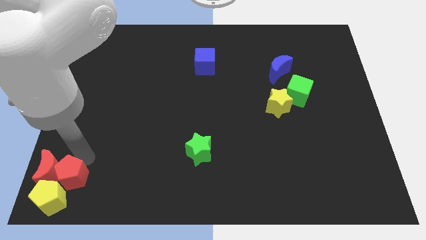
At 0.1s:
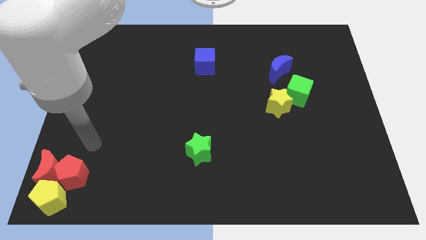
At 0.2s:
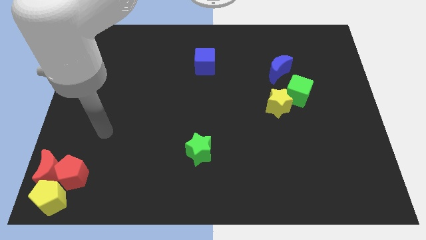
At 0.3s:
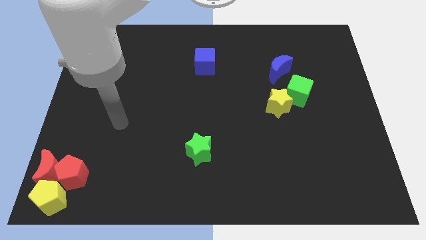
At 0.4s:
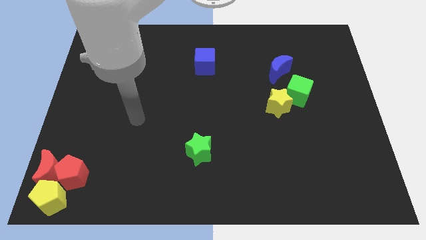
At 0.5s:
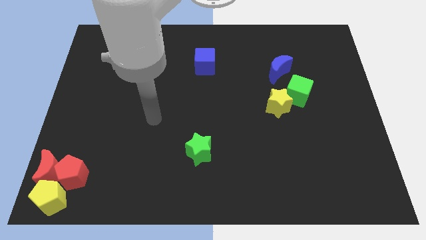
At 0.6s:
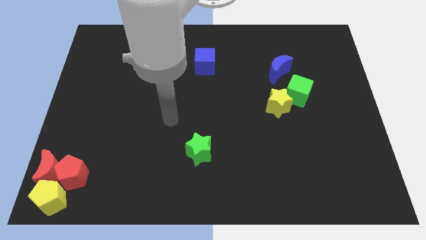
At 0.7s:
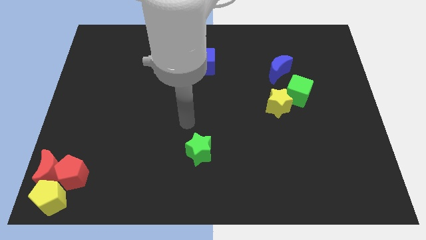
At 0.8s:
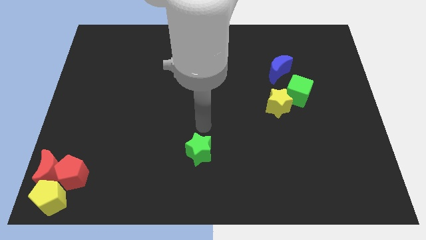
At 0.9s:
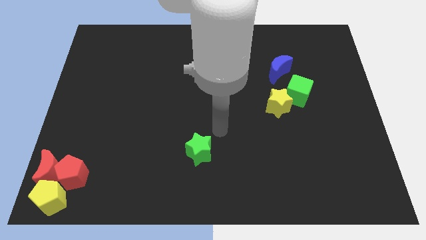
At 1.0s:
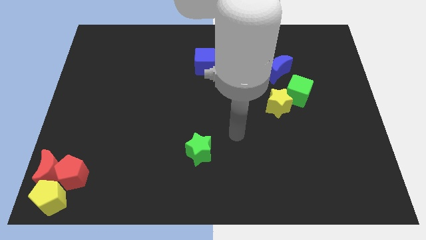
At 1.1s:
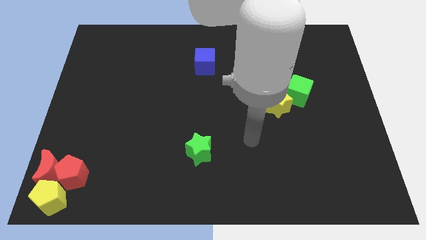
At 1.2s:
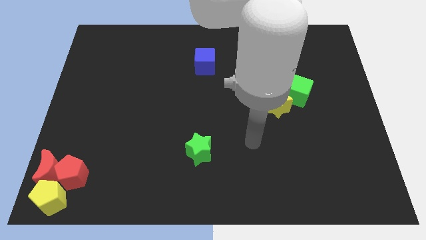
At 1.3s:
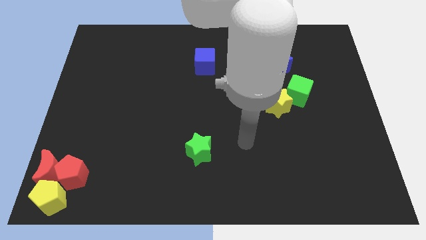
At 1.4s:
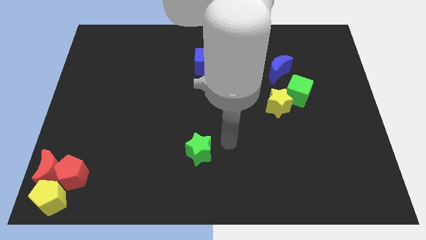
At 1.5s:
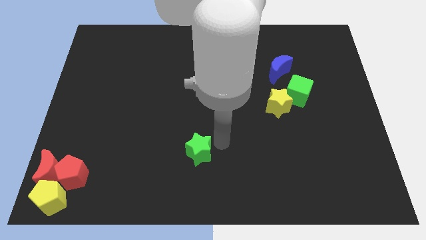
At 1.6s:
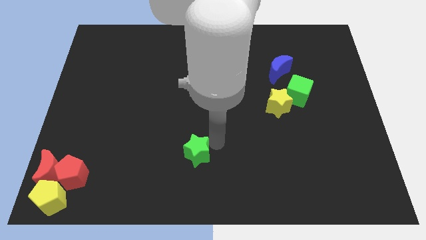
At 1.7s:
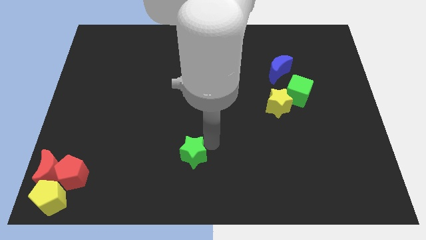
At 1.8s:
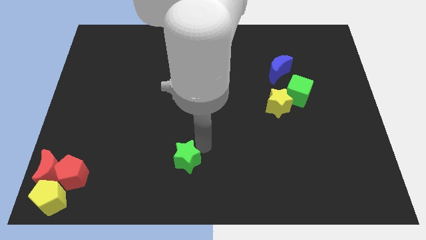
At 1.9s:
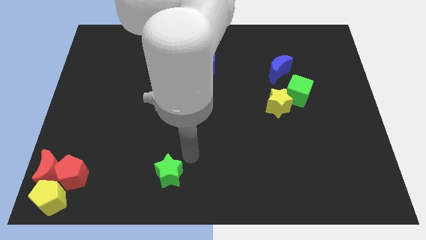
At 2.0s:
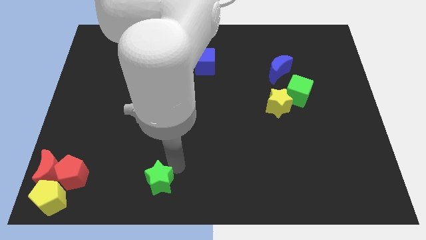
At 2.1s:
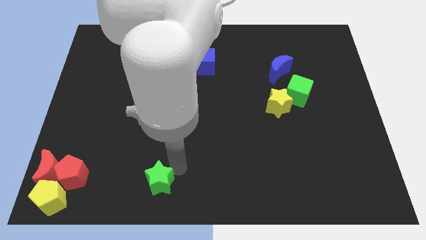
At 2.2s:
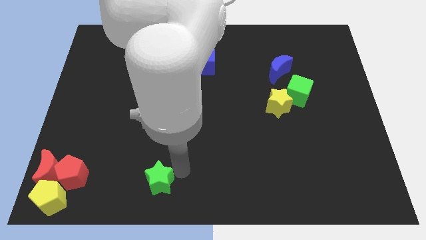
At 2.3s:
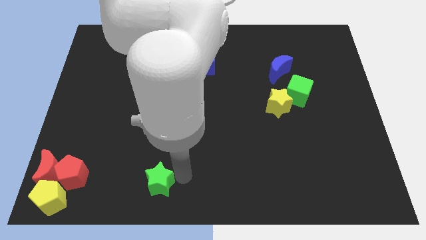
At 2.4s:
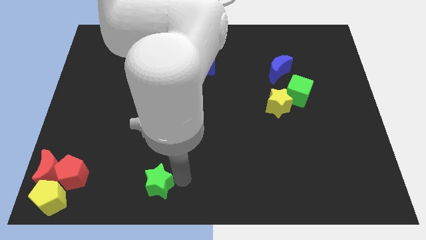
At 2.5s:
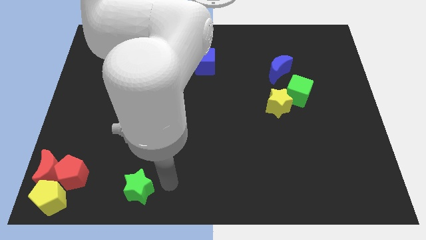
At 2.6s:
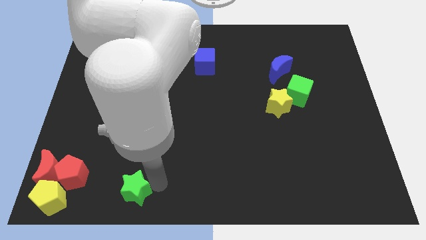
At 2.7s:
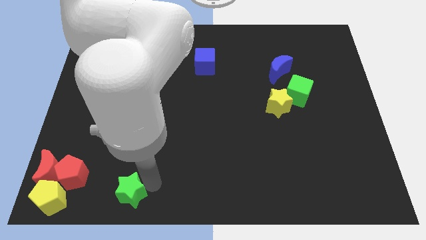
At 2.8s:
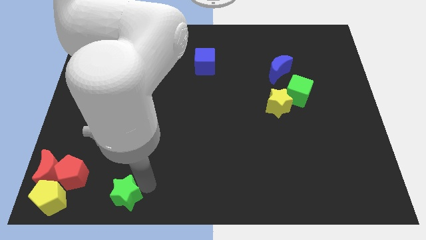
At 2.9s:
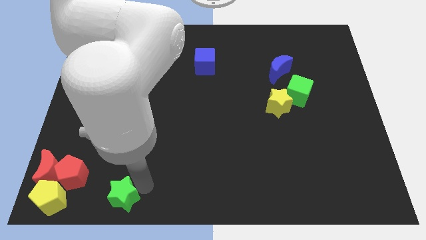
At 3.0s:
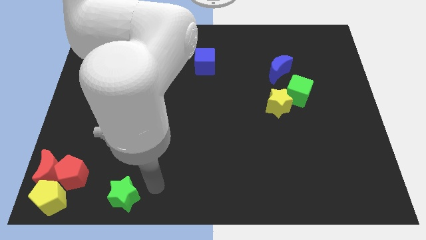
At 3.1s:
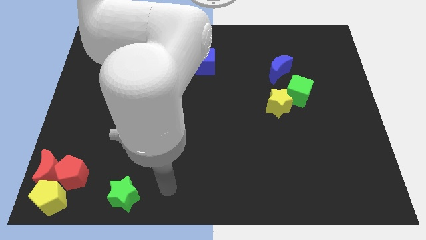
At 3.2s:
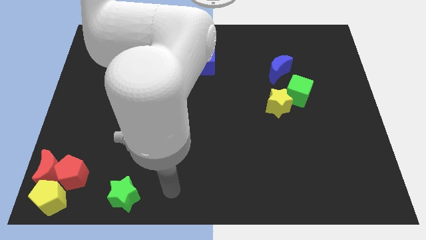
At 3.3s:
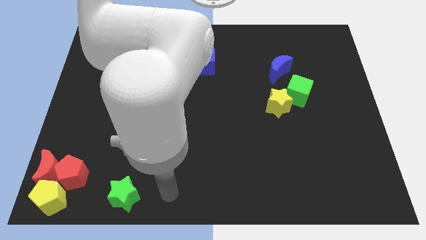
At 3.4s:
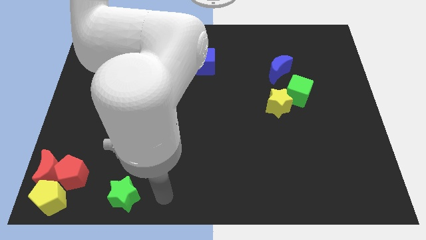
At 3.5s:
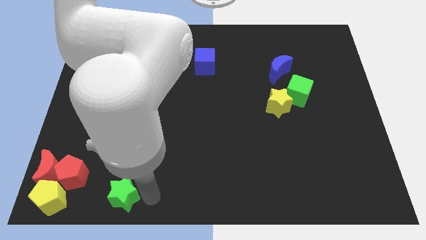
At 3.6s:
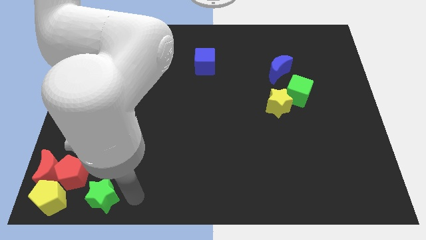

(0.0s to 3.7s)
place the green star at right side of the yellow pentagon

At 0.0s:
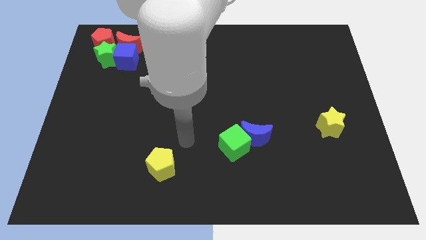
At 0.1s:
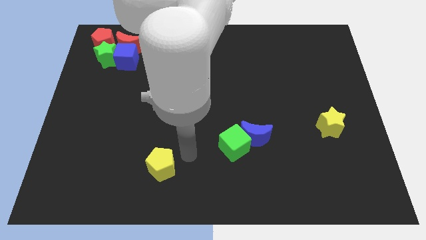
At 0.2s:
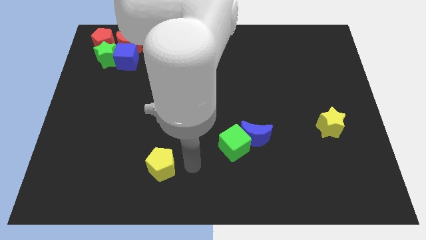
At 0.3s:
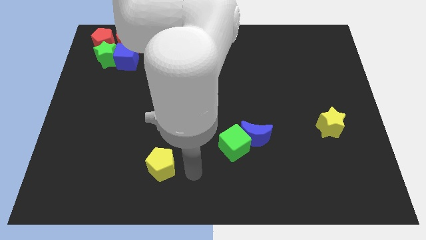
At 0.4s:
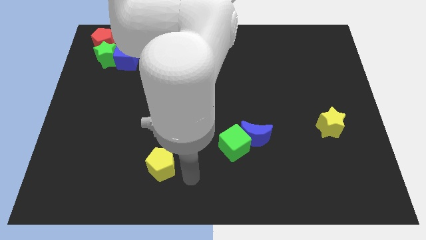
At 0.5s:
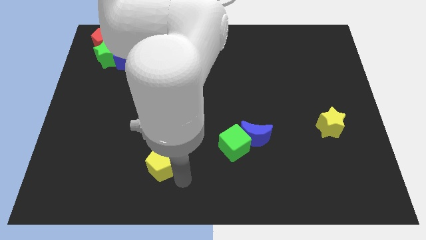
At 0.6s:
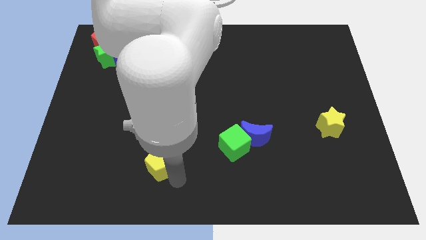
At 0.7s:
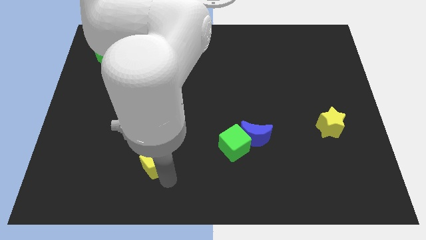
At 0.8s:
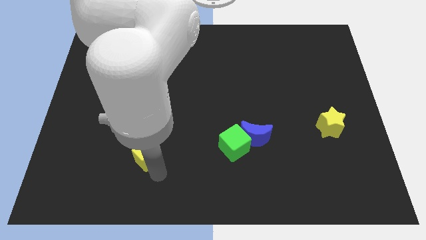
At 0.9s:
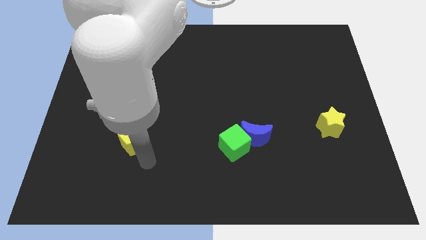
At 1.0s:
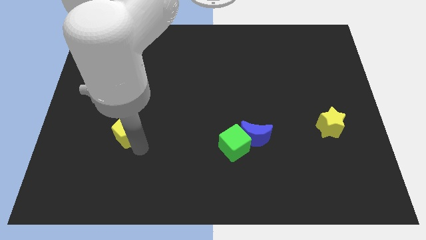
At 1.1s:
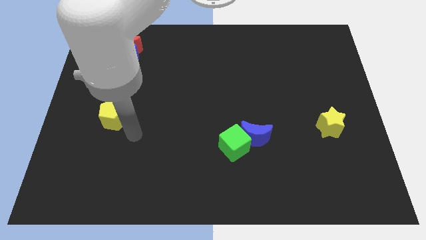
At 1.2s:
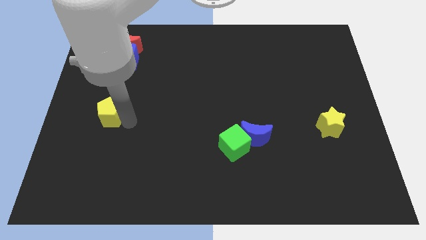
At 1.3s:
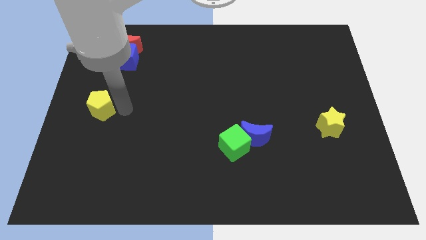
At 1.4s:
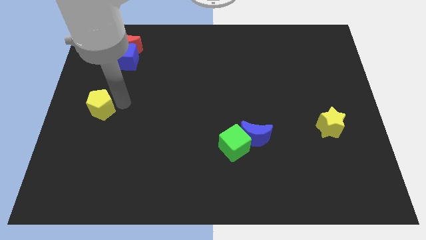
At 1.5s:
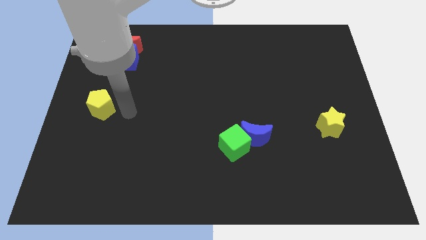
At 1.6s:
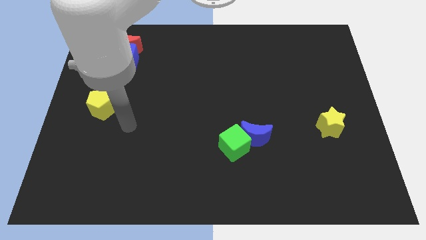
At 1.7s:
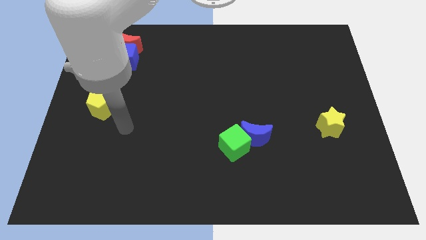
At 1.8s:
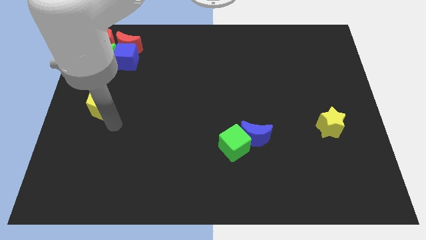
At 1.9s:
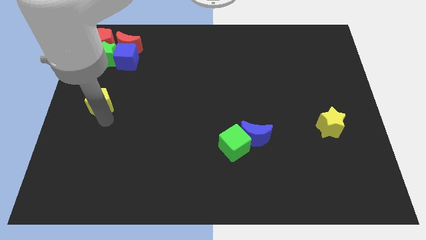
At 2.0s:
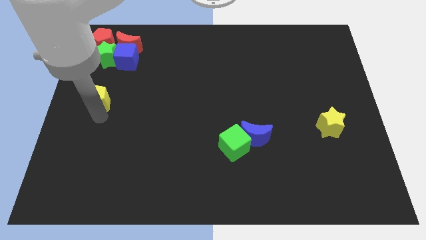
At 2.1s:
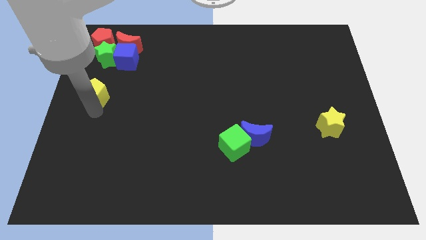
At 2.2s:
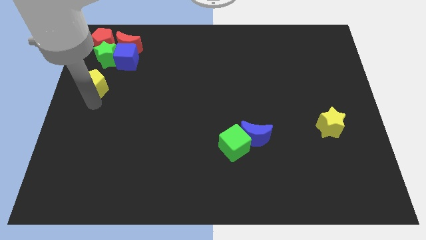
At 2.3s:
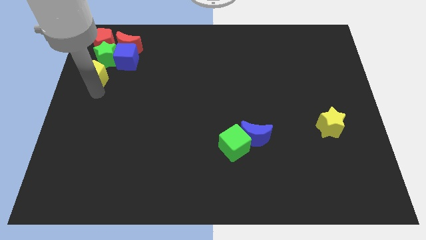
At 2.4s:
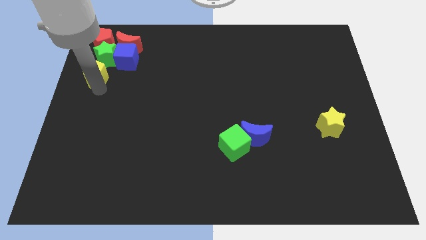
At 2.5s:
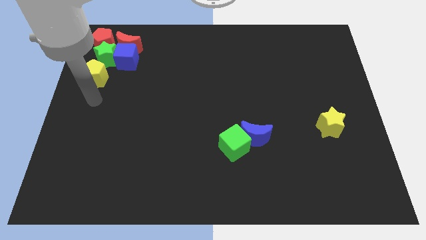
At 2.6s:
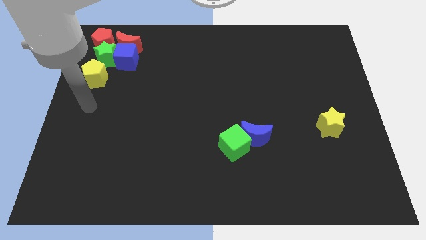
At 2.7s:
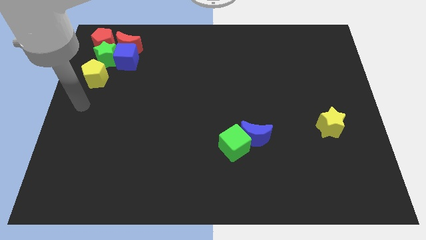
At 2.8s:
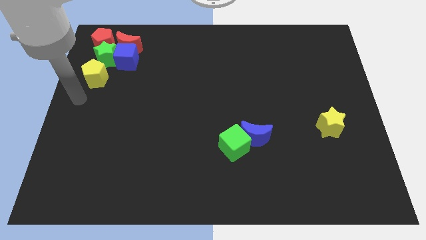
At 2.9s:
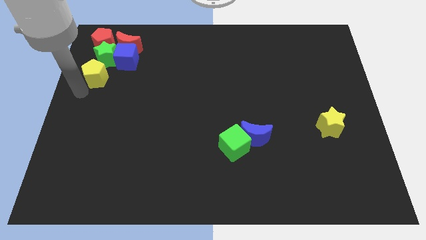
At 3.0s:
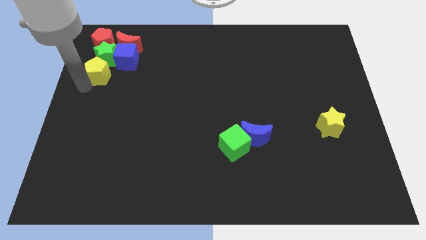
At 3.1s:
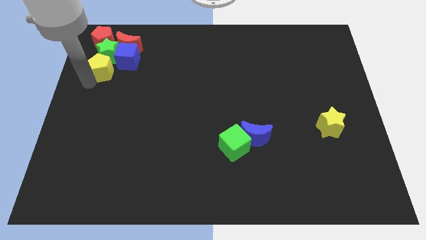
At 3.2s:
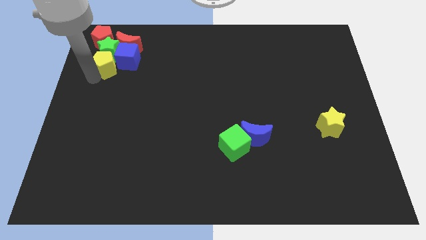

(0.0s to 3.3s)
move the yellow pentagon into the group of blocks

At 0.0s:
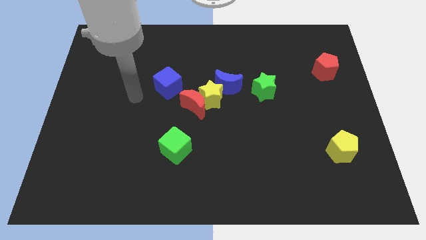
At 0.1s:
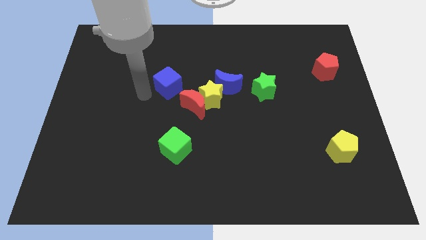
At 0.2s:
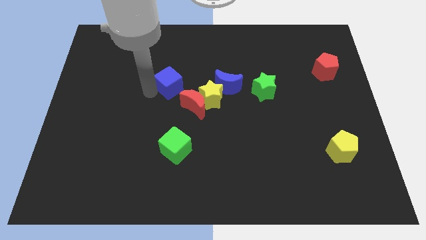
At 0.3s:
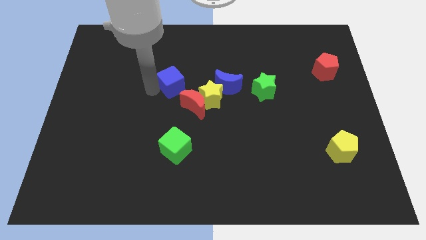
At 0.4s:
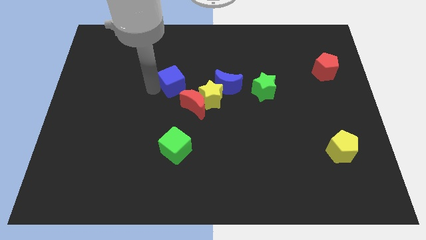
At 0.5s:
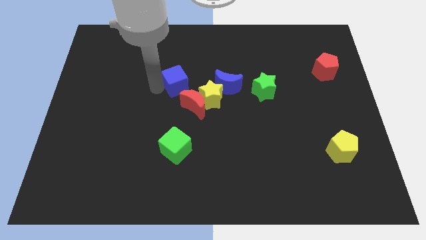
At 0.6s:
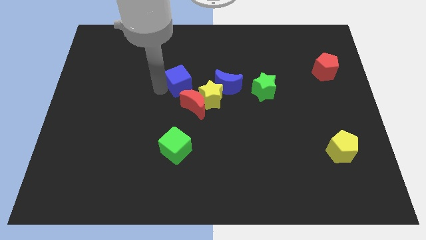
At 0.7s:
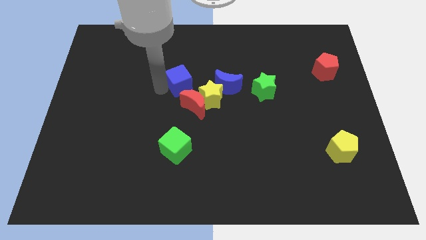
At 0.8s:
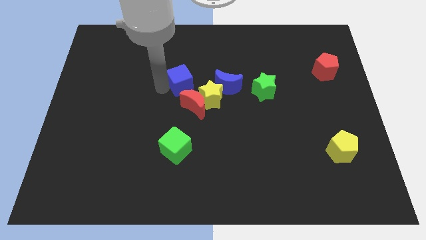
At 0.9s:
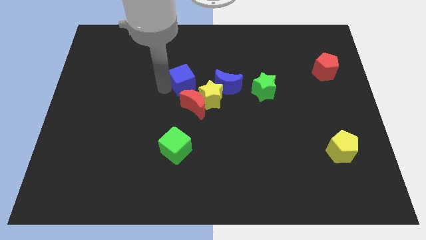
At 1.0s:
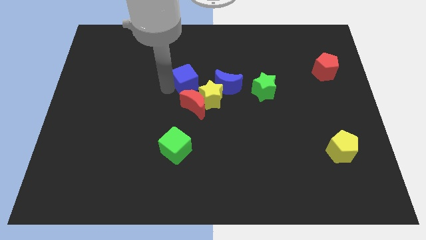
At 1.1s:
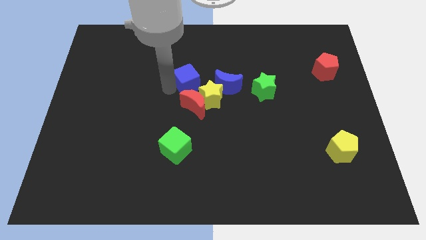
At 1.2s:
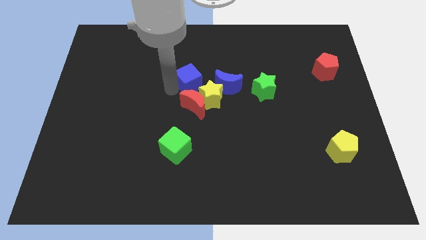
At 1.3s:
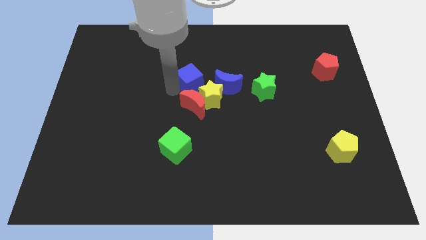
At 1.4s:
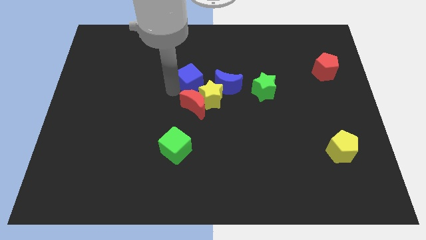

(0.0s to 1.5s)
move the blue cube to the top of the red crescent

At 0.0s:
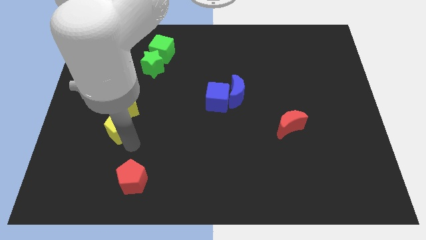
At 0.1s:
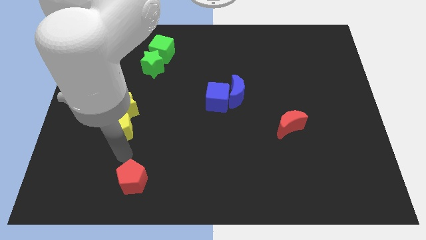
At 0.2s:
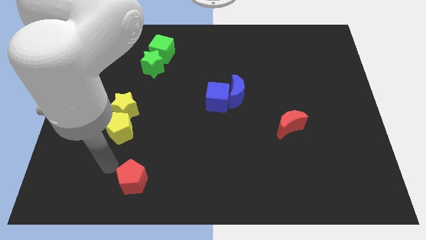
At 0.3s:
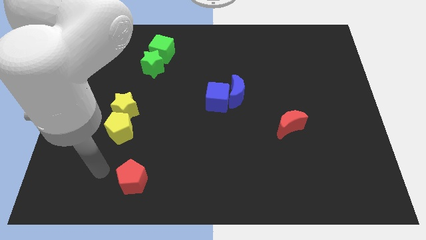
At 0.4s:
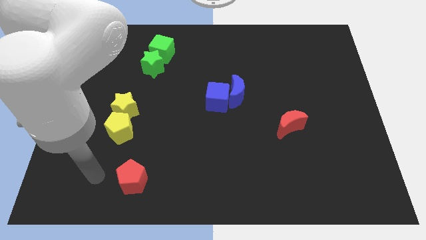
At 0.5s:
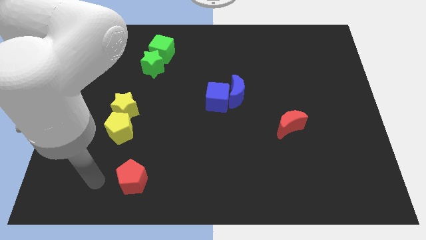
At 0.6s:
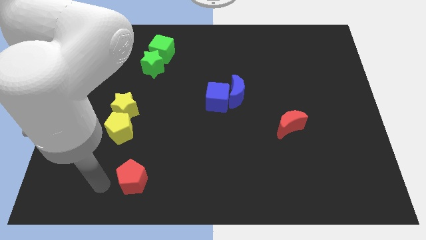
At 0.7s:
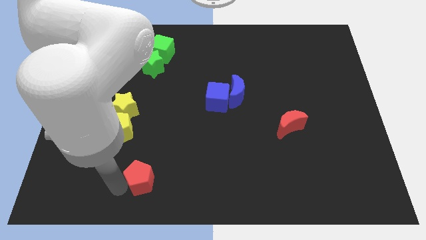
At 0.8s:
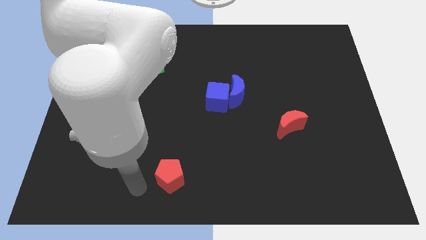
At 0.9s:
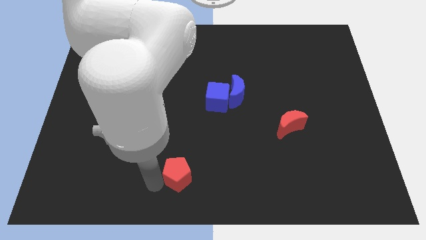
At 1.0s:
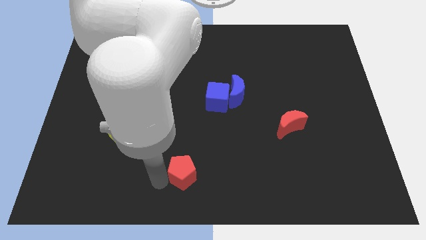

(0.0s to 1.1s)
push the red pentagon to the right of the board
